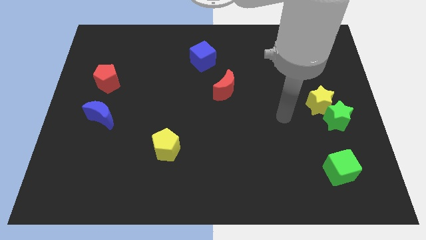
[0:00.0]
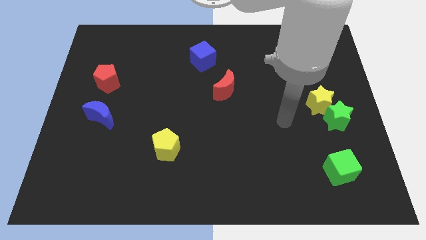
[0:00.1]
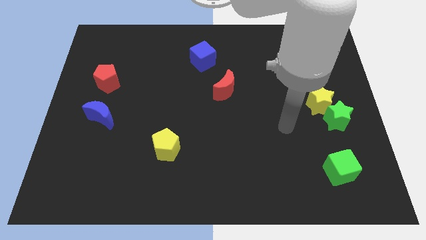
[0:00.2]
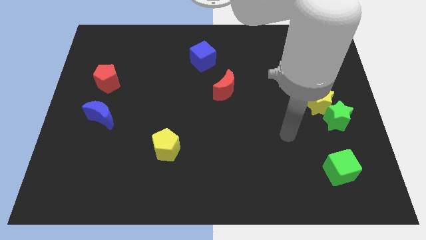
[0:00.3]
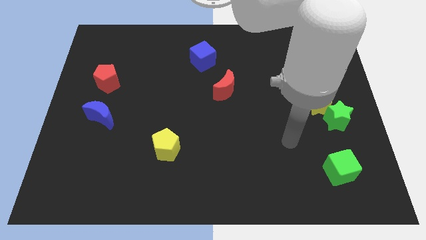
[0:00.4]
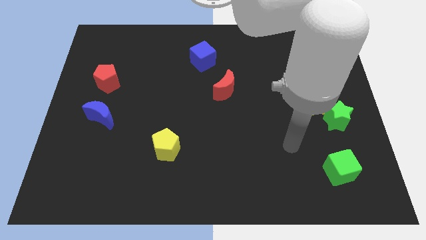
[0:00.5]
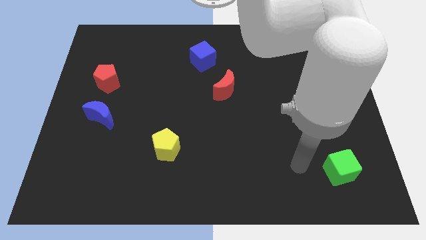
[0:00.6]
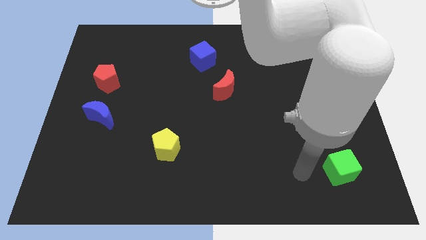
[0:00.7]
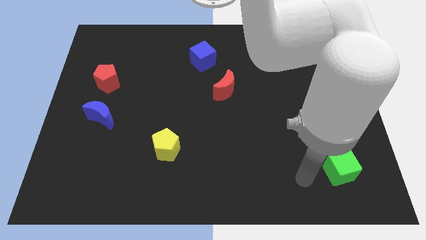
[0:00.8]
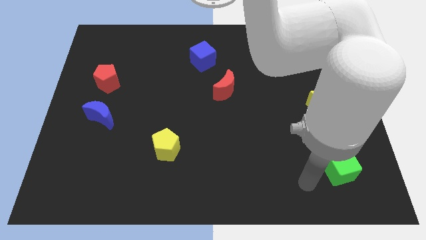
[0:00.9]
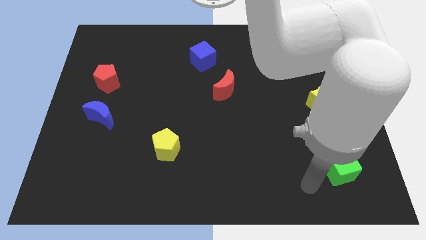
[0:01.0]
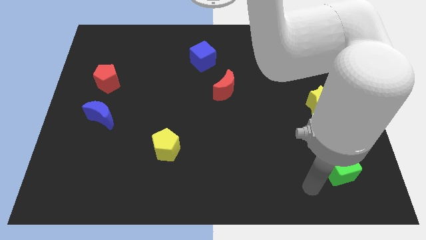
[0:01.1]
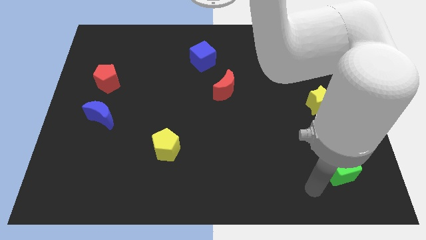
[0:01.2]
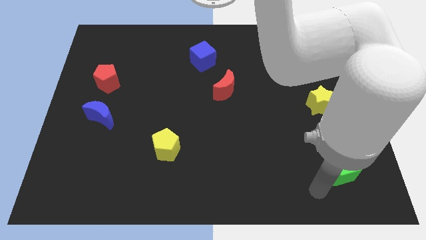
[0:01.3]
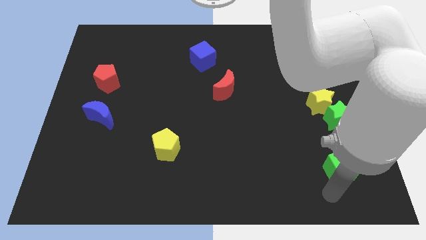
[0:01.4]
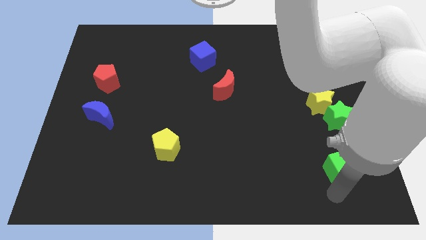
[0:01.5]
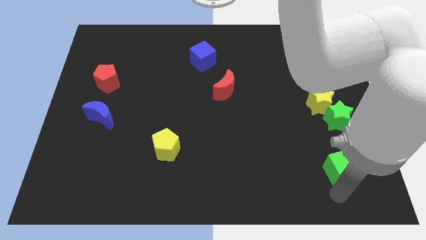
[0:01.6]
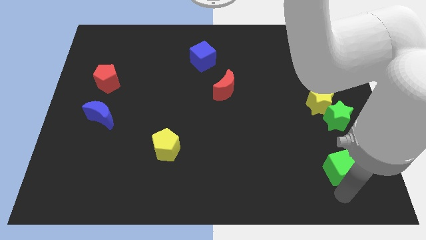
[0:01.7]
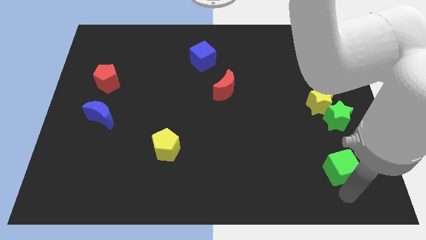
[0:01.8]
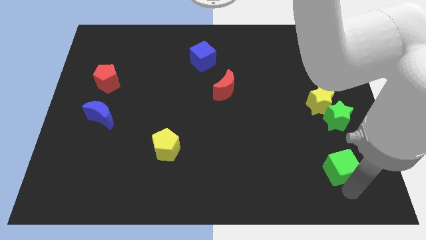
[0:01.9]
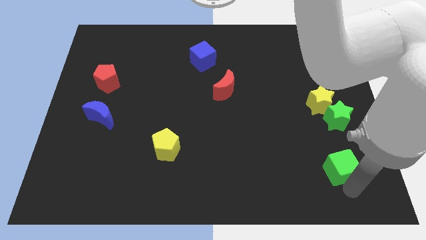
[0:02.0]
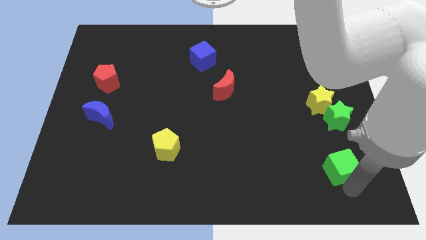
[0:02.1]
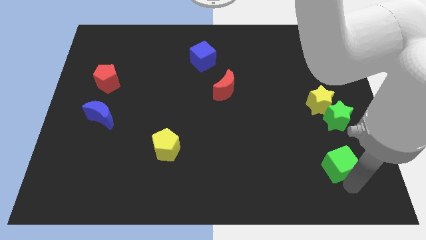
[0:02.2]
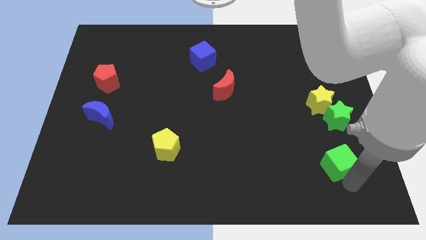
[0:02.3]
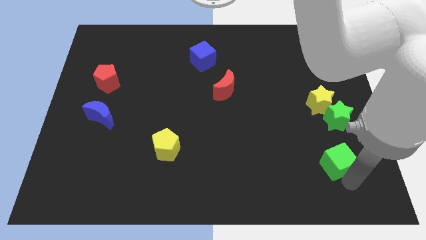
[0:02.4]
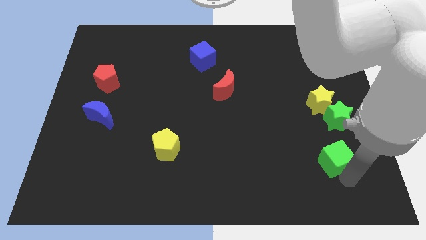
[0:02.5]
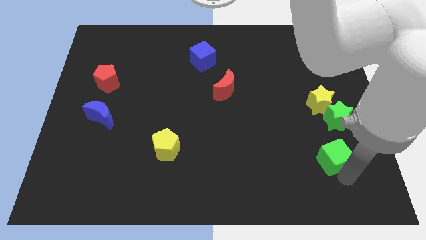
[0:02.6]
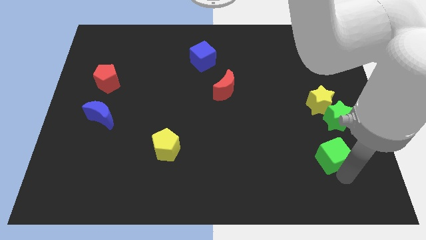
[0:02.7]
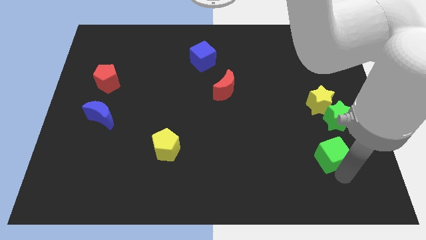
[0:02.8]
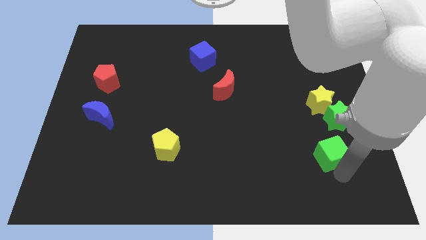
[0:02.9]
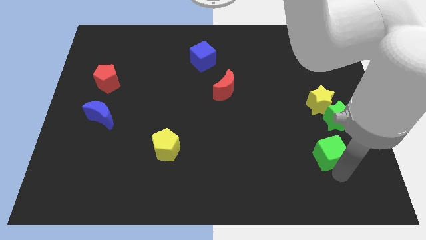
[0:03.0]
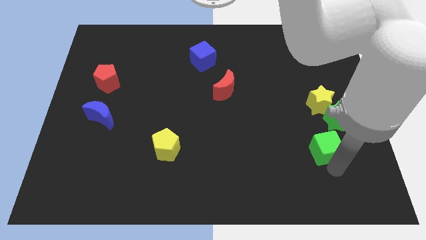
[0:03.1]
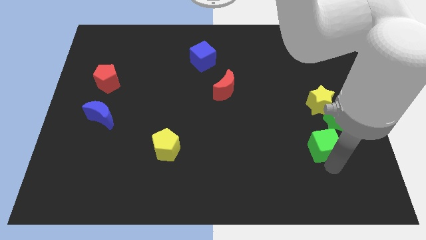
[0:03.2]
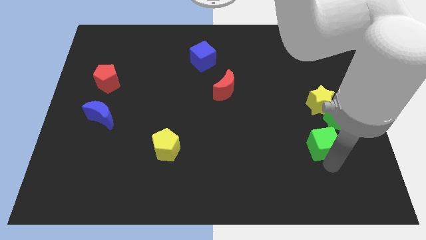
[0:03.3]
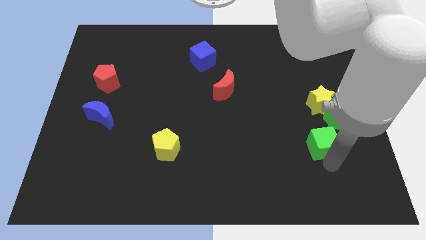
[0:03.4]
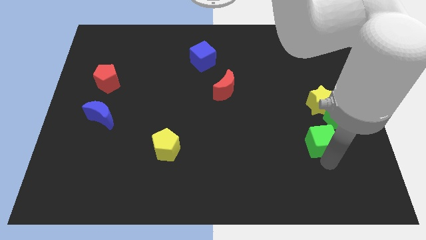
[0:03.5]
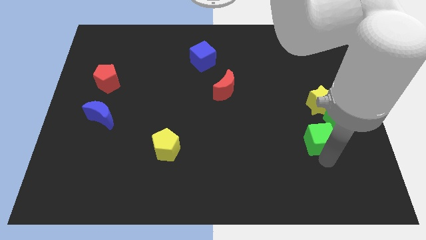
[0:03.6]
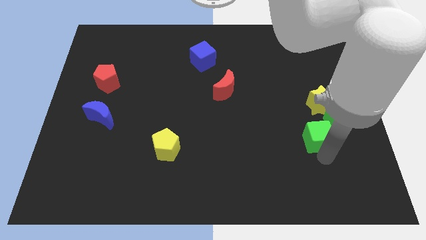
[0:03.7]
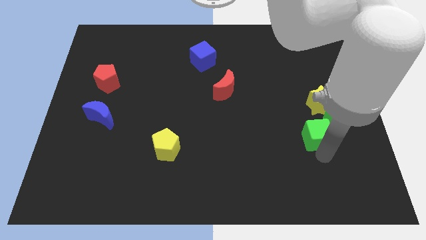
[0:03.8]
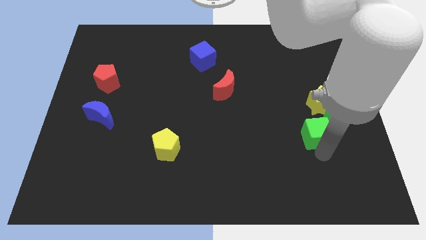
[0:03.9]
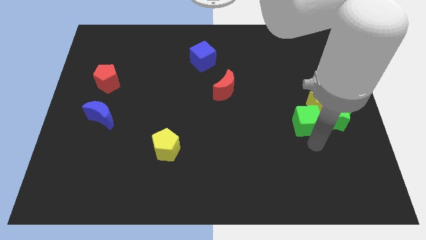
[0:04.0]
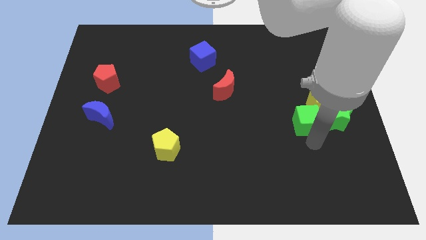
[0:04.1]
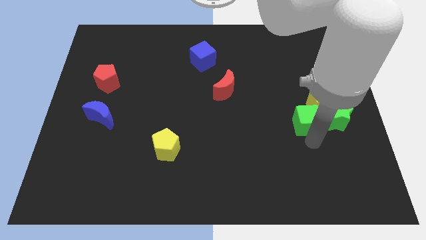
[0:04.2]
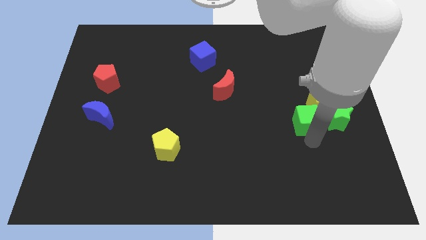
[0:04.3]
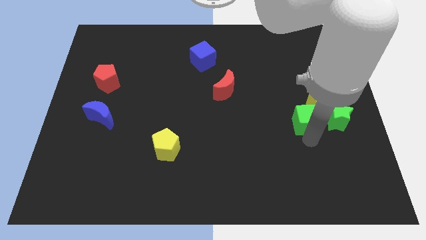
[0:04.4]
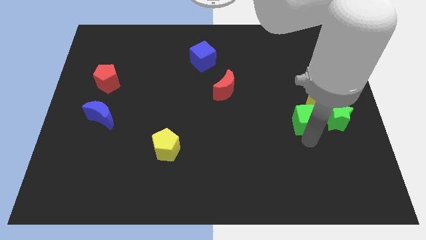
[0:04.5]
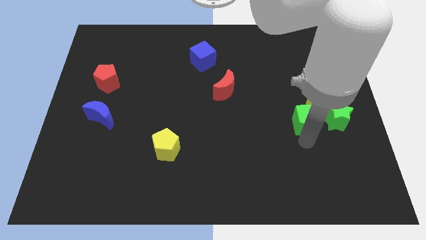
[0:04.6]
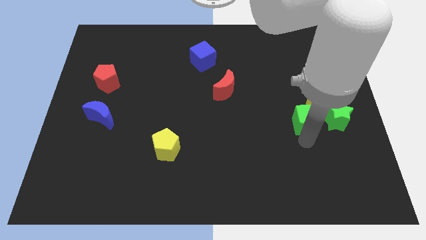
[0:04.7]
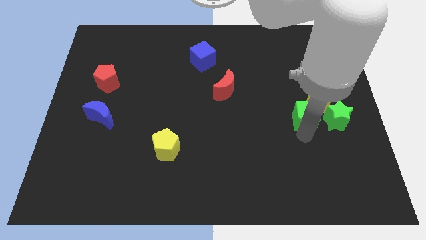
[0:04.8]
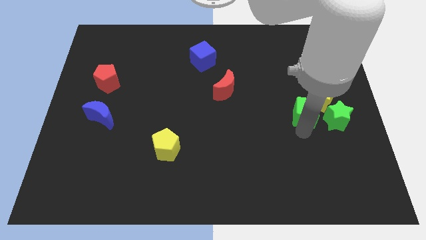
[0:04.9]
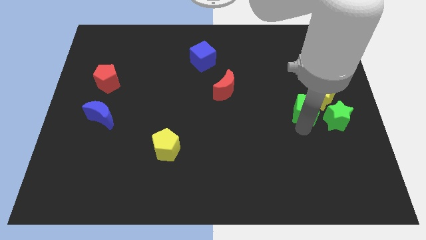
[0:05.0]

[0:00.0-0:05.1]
move the green cube close to the yellow star

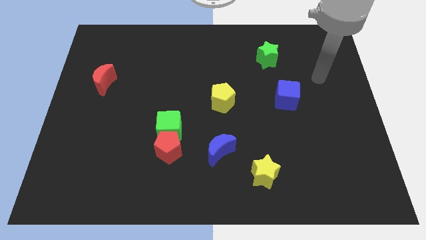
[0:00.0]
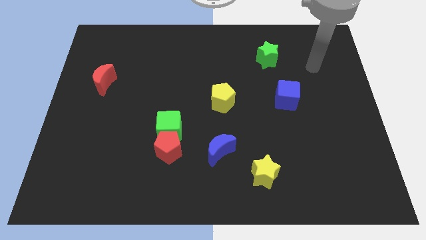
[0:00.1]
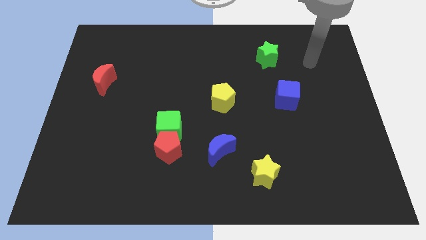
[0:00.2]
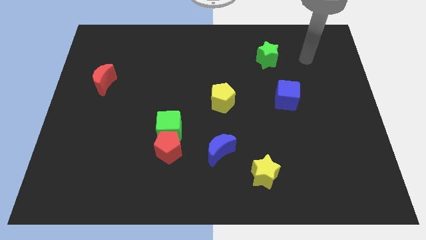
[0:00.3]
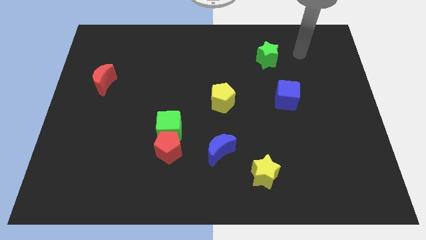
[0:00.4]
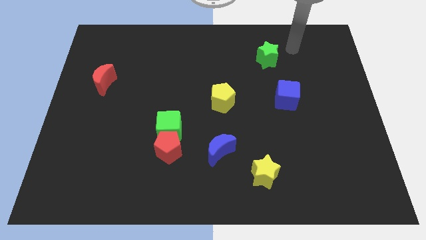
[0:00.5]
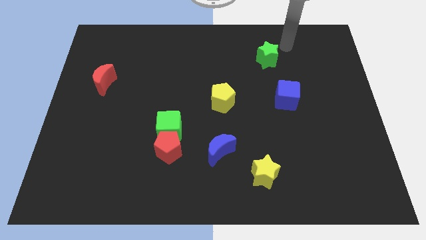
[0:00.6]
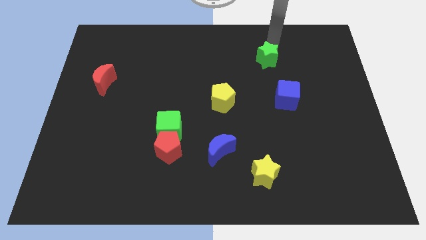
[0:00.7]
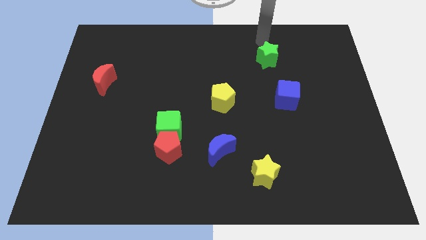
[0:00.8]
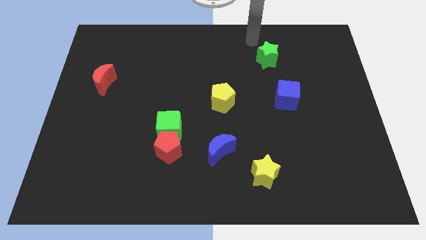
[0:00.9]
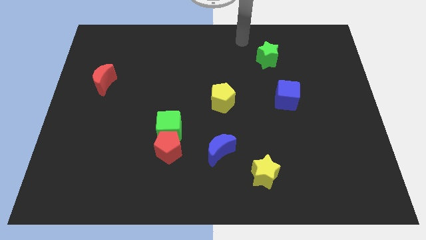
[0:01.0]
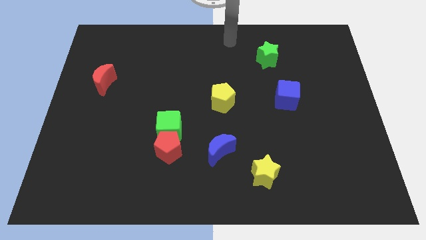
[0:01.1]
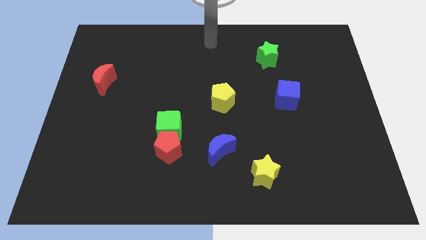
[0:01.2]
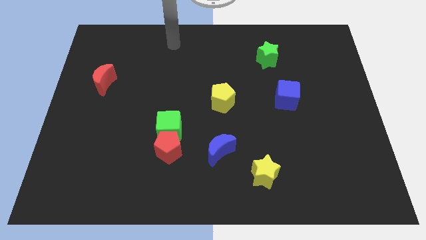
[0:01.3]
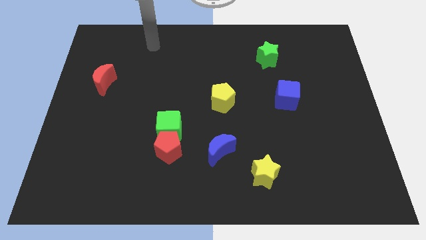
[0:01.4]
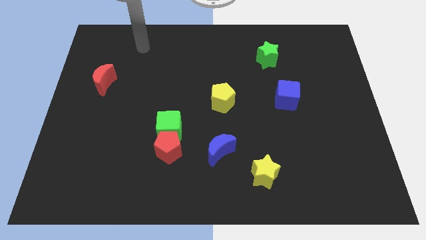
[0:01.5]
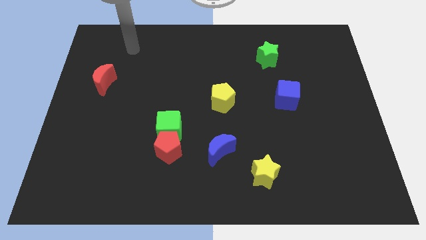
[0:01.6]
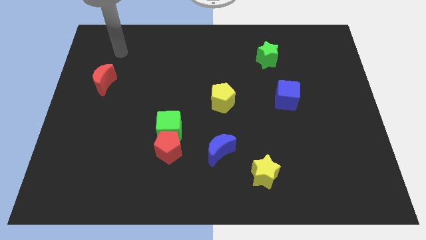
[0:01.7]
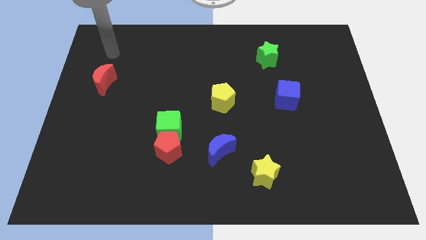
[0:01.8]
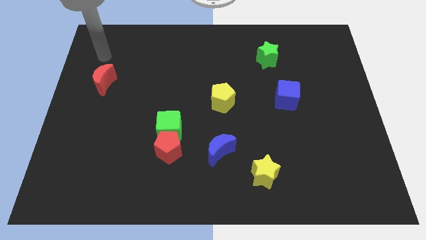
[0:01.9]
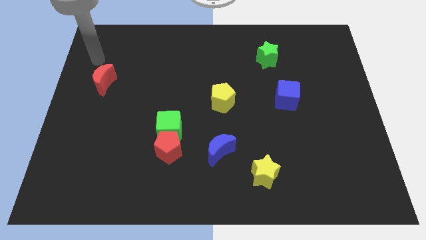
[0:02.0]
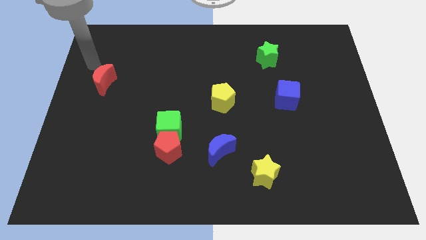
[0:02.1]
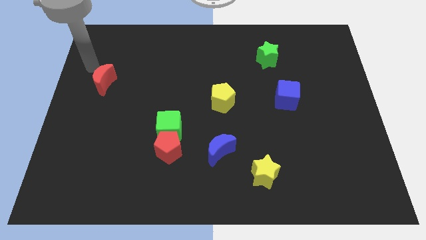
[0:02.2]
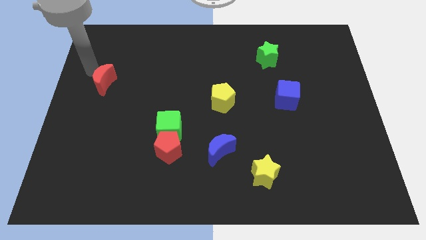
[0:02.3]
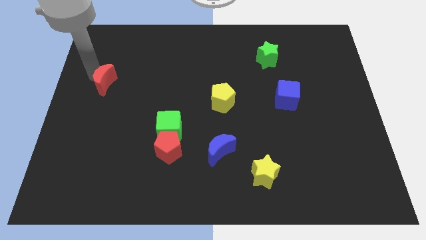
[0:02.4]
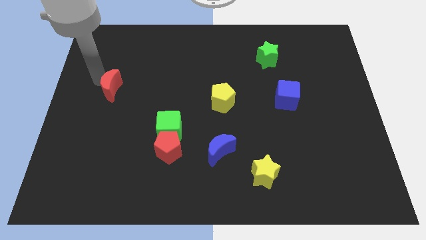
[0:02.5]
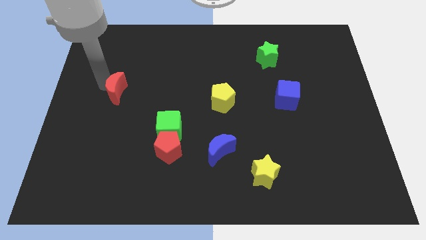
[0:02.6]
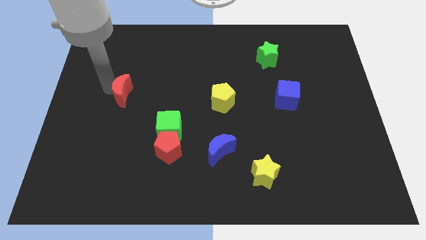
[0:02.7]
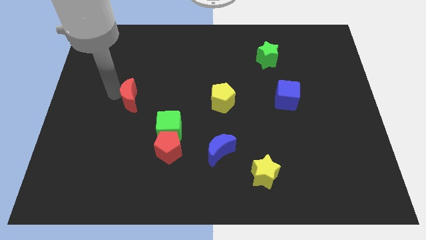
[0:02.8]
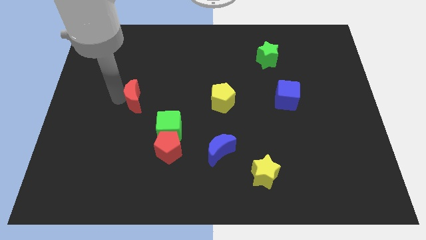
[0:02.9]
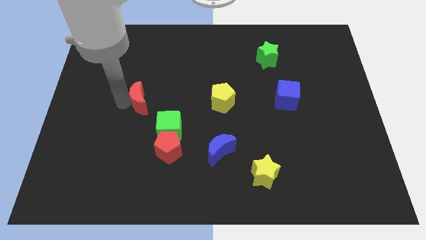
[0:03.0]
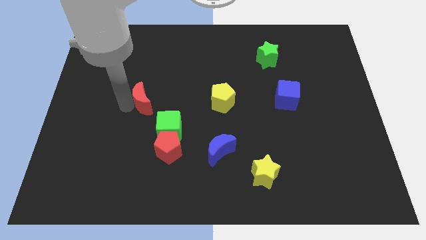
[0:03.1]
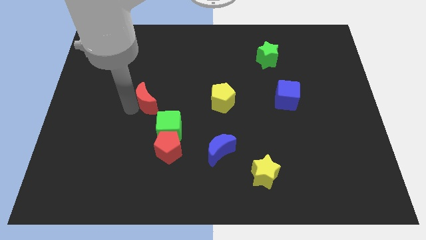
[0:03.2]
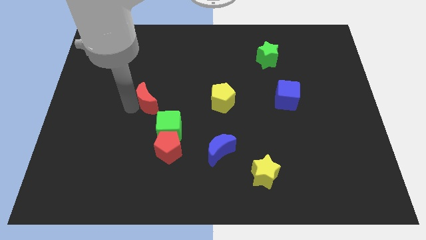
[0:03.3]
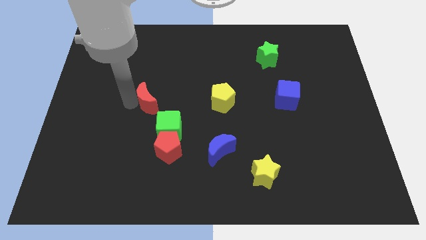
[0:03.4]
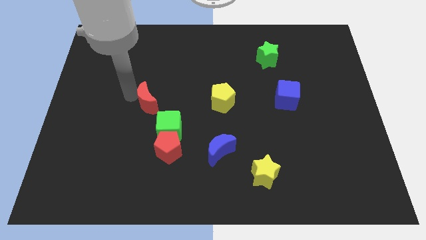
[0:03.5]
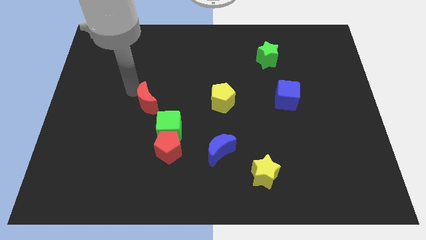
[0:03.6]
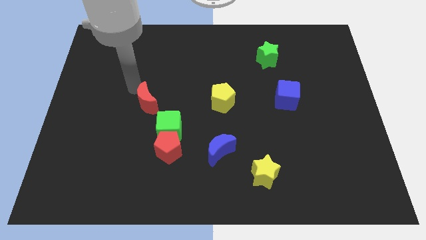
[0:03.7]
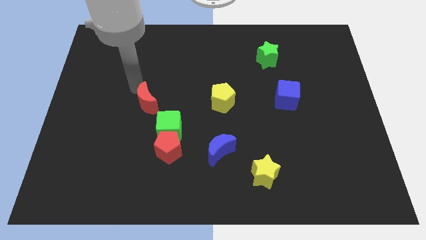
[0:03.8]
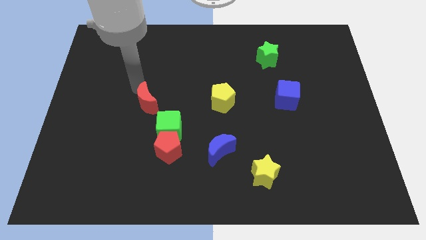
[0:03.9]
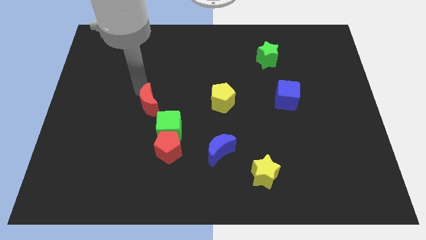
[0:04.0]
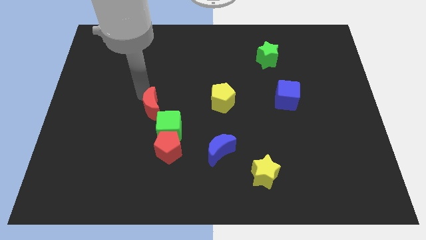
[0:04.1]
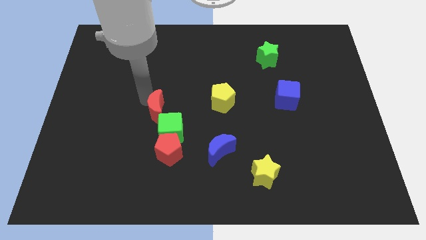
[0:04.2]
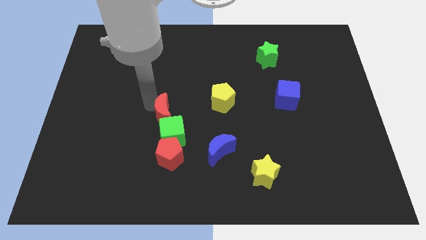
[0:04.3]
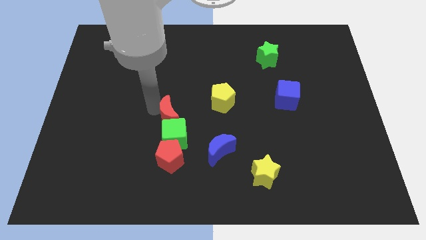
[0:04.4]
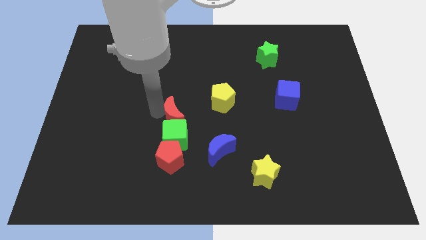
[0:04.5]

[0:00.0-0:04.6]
move the red moon next to the green cube
